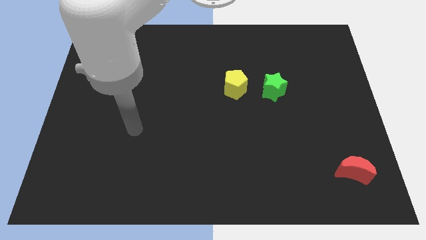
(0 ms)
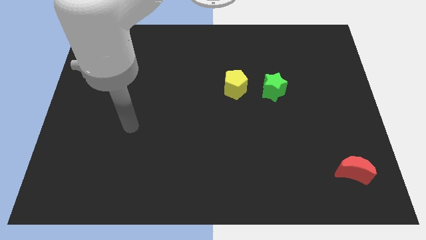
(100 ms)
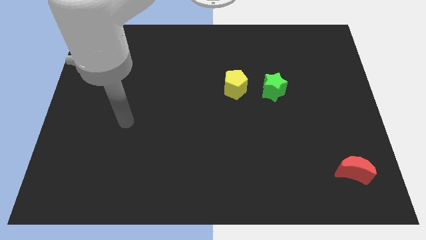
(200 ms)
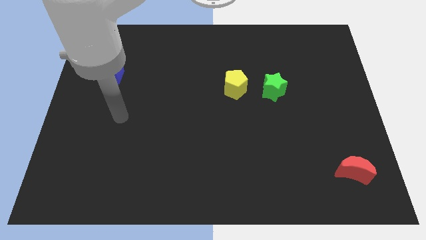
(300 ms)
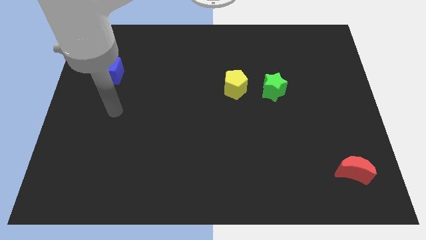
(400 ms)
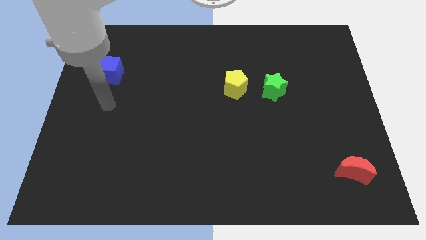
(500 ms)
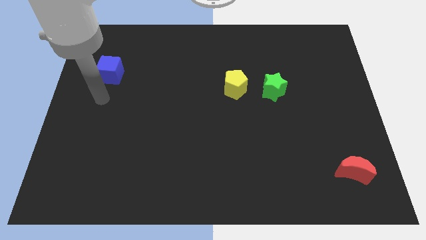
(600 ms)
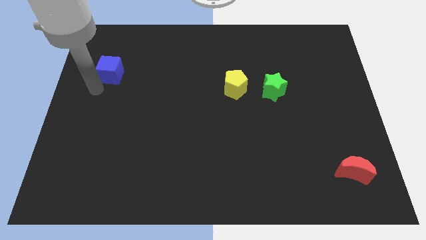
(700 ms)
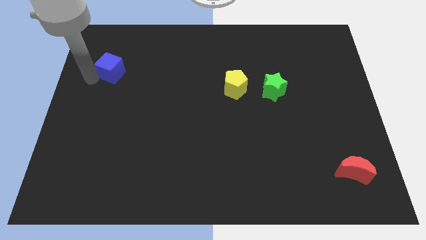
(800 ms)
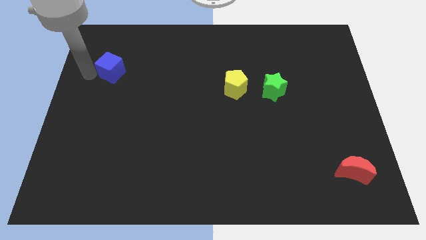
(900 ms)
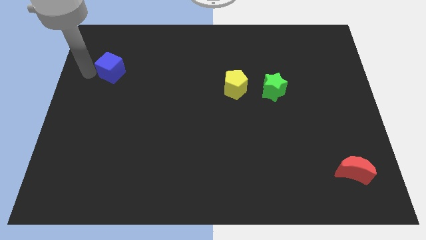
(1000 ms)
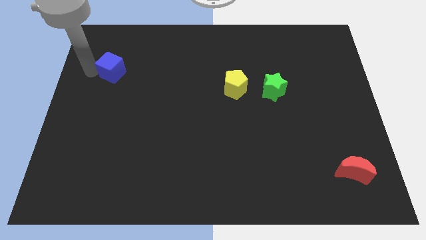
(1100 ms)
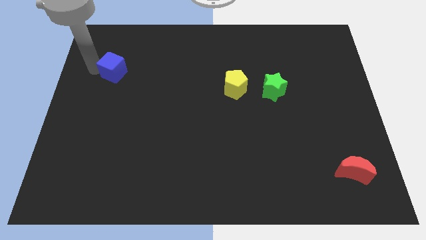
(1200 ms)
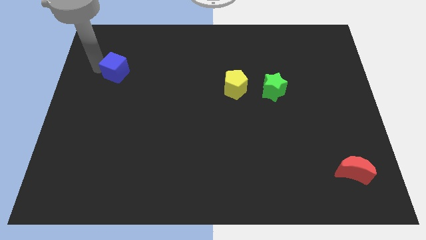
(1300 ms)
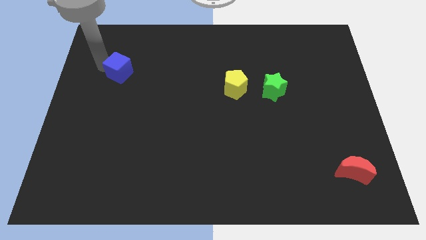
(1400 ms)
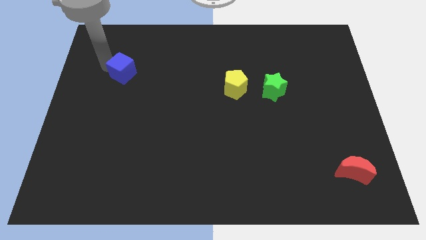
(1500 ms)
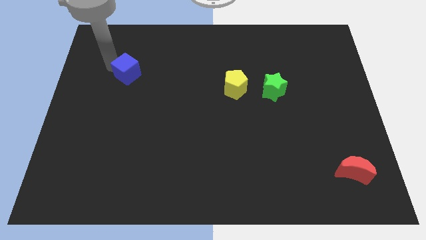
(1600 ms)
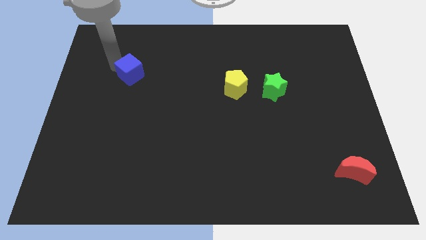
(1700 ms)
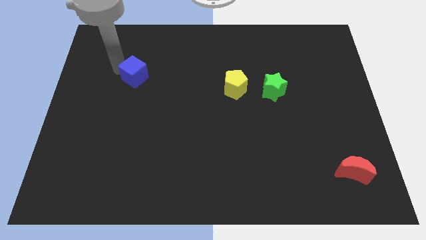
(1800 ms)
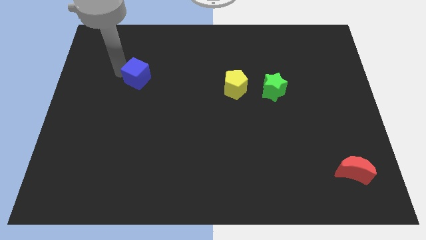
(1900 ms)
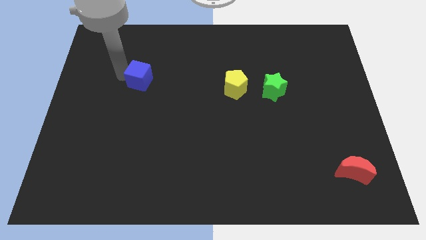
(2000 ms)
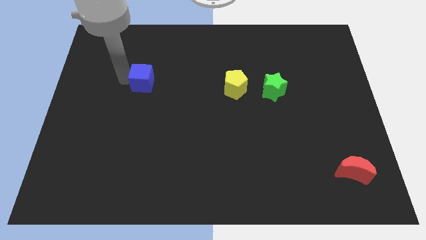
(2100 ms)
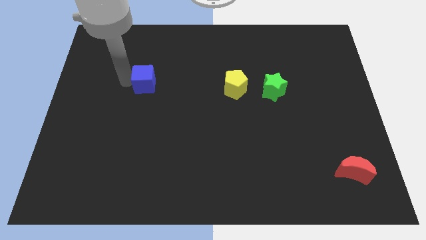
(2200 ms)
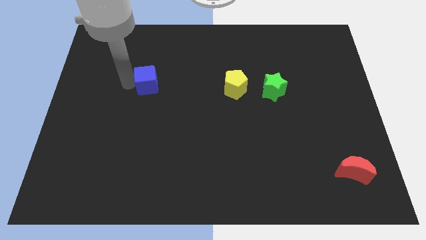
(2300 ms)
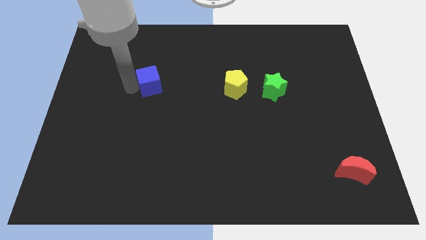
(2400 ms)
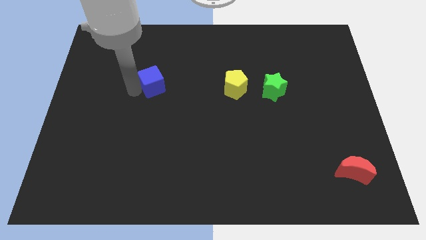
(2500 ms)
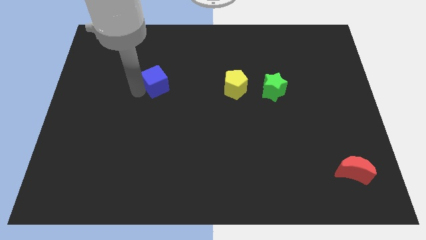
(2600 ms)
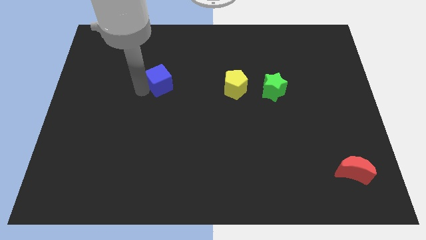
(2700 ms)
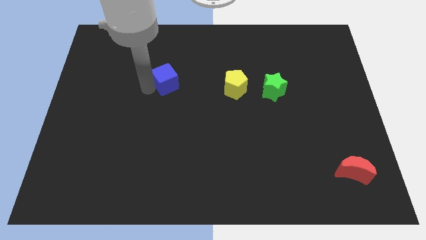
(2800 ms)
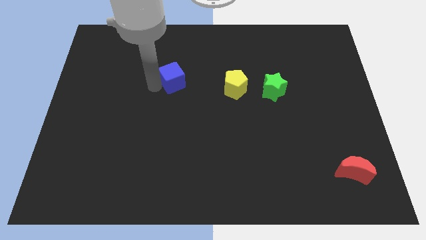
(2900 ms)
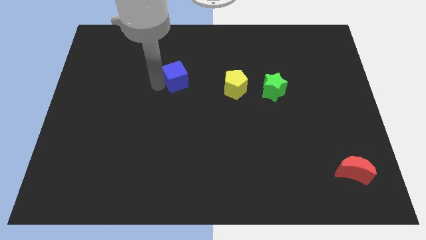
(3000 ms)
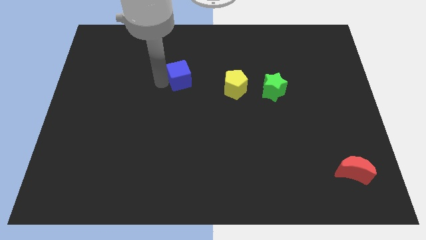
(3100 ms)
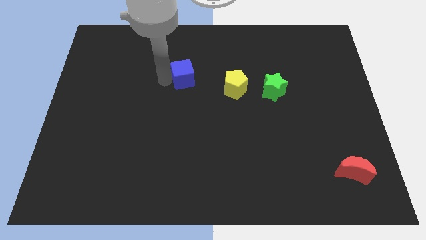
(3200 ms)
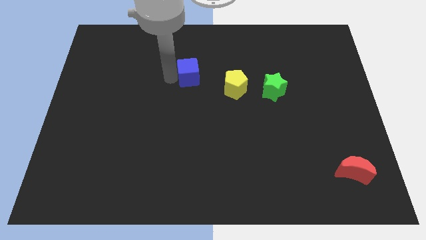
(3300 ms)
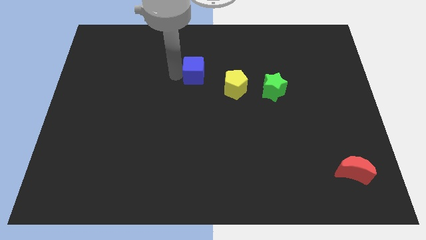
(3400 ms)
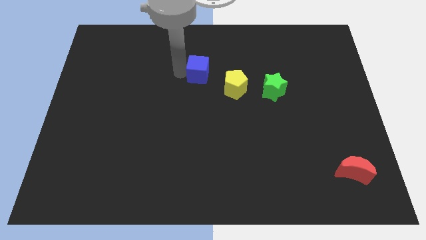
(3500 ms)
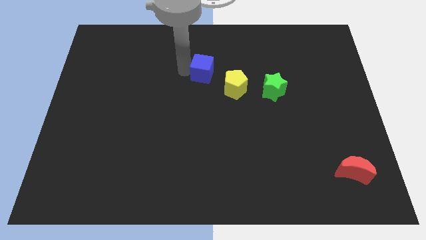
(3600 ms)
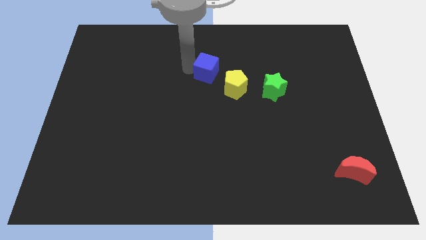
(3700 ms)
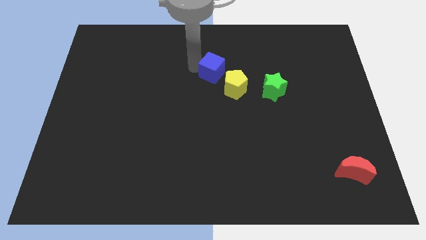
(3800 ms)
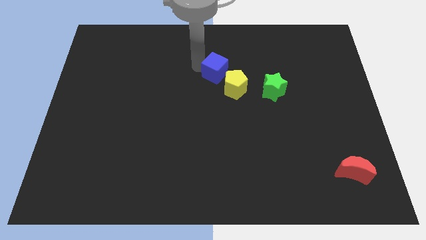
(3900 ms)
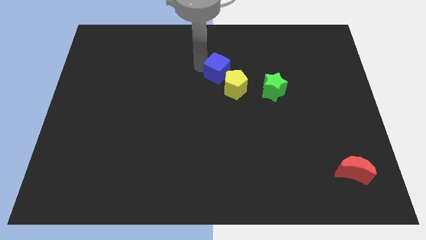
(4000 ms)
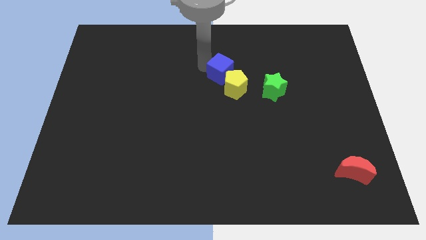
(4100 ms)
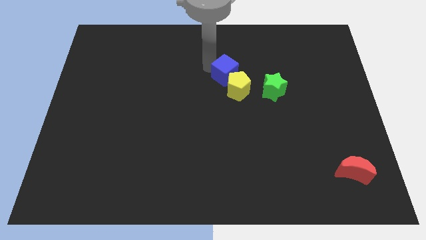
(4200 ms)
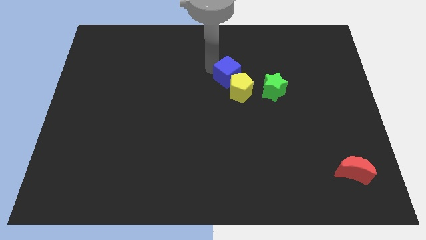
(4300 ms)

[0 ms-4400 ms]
put the blue cube to the pentagon

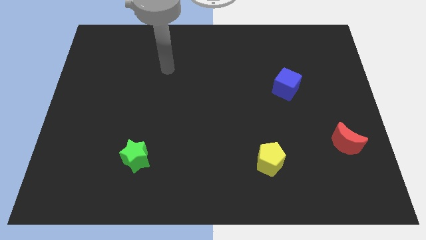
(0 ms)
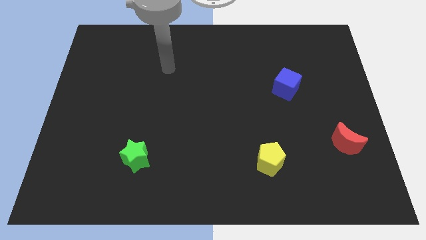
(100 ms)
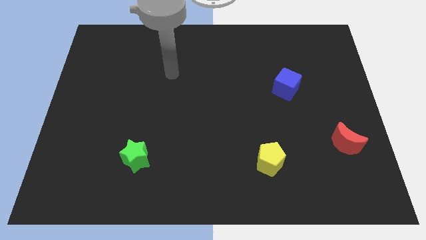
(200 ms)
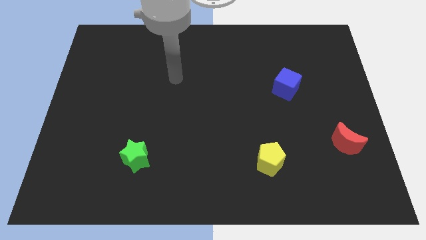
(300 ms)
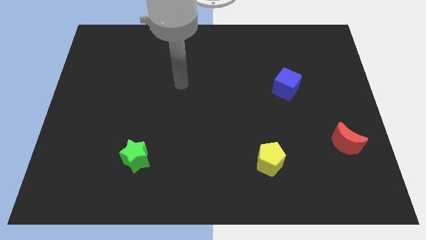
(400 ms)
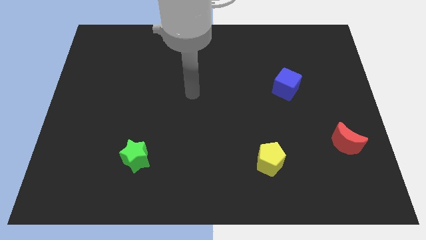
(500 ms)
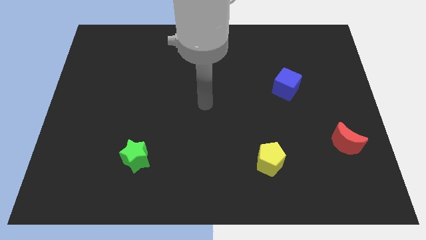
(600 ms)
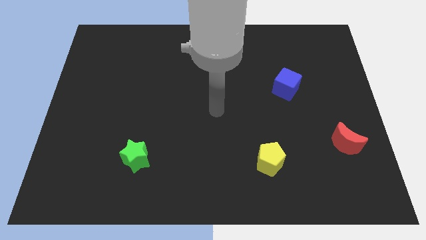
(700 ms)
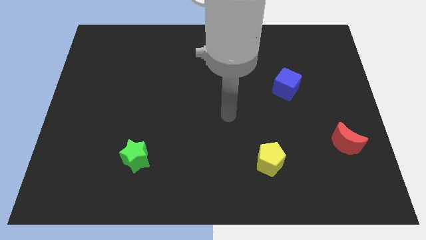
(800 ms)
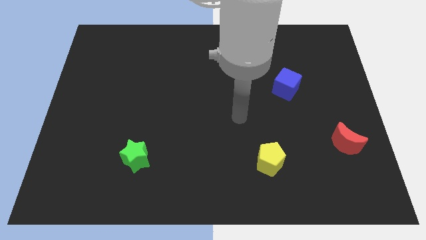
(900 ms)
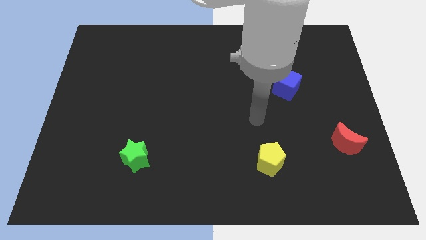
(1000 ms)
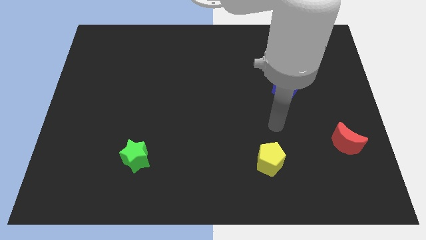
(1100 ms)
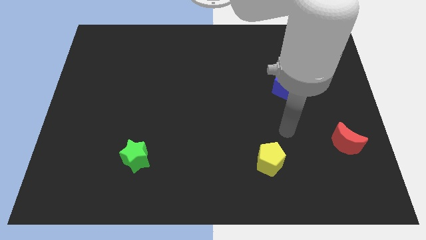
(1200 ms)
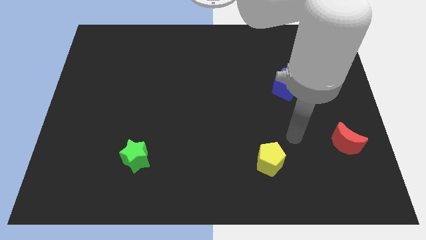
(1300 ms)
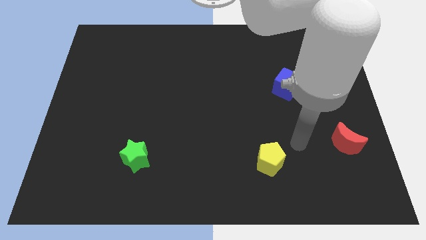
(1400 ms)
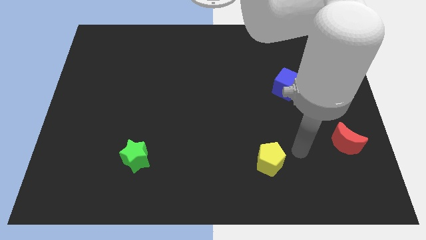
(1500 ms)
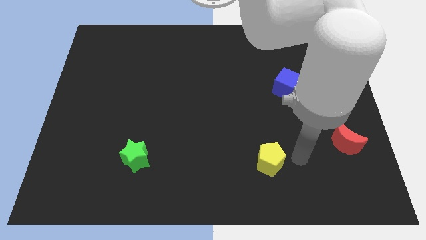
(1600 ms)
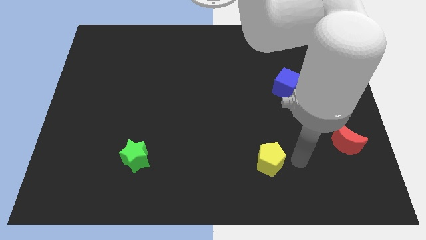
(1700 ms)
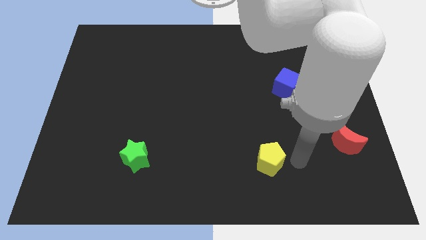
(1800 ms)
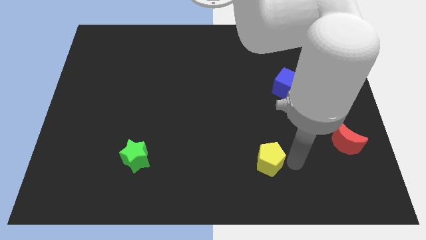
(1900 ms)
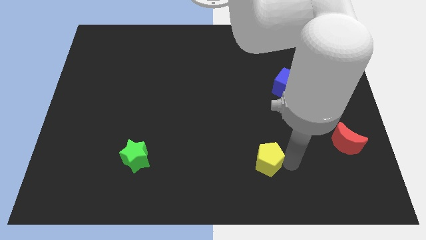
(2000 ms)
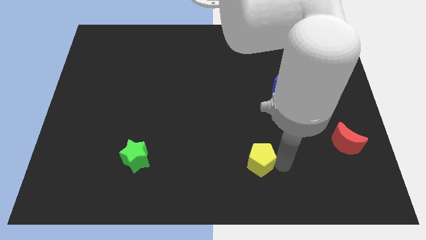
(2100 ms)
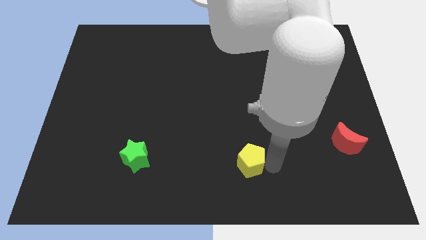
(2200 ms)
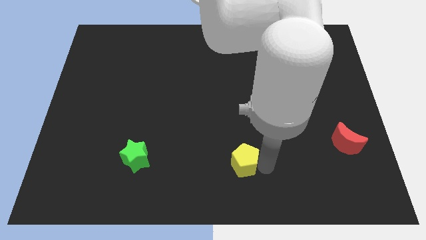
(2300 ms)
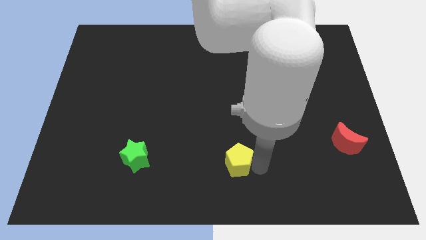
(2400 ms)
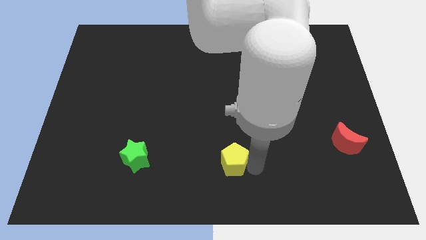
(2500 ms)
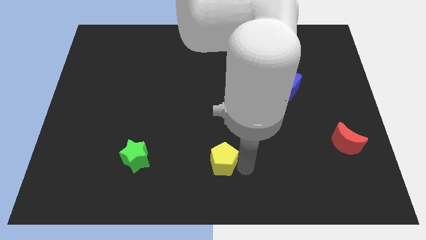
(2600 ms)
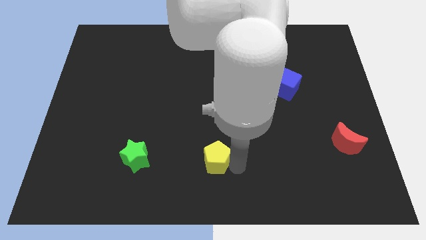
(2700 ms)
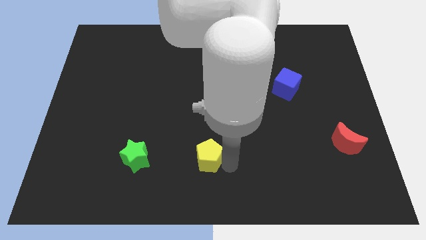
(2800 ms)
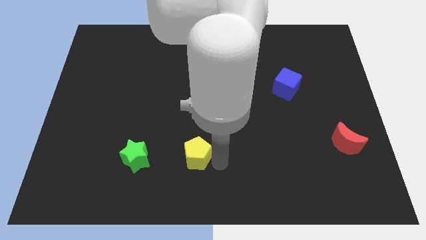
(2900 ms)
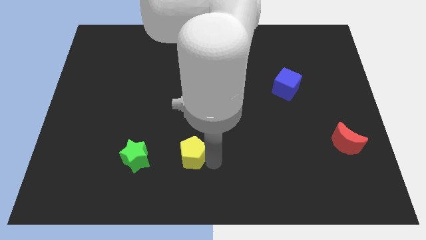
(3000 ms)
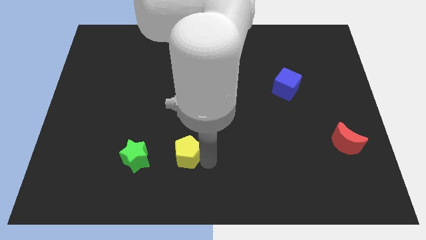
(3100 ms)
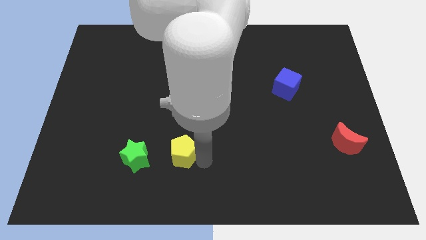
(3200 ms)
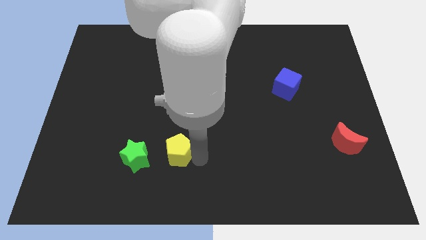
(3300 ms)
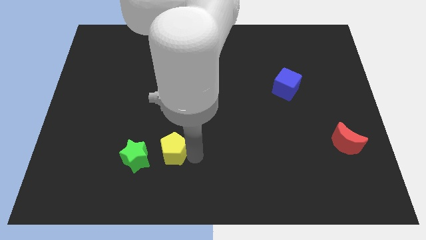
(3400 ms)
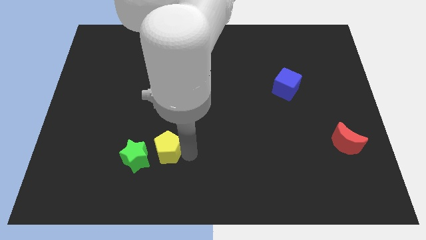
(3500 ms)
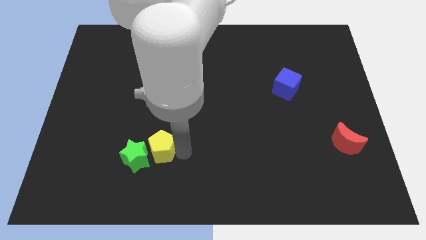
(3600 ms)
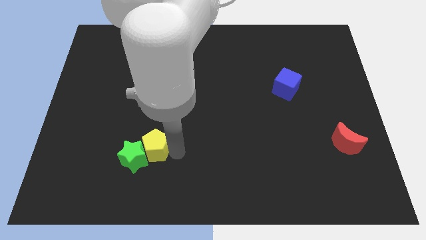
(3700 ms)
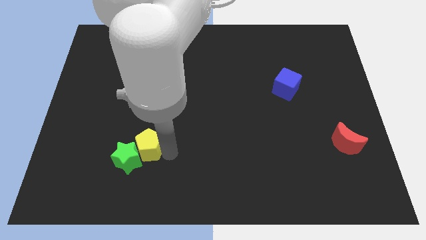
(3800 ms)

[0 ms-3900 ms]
move the yellow block towards the green star

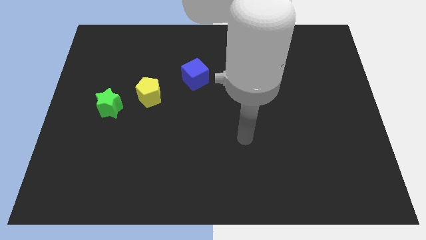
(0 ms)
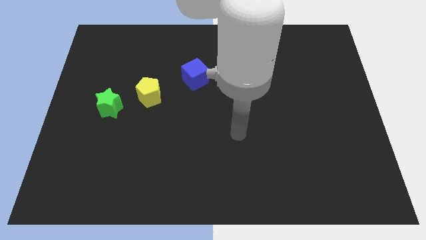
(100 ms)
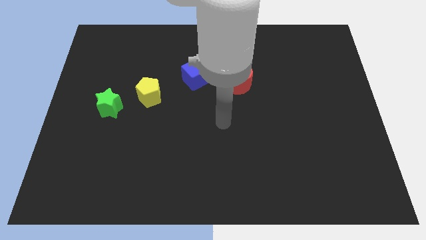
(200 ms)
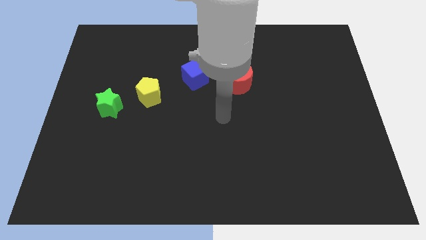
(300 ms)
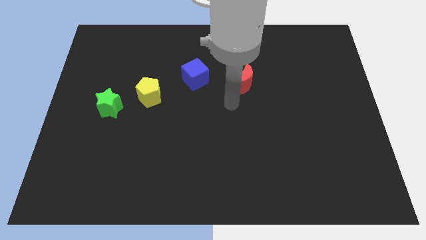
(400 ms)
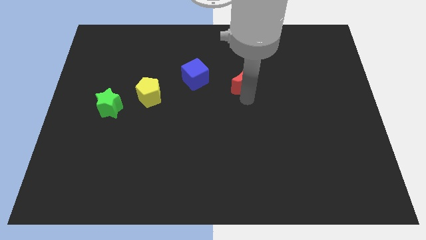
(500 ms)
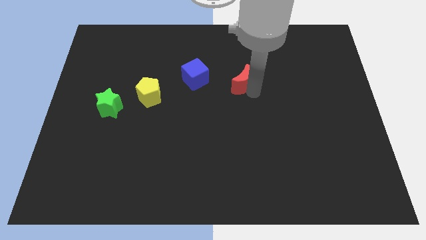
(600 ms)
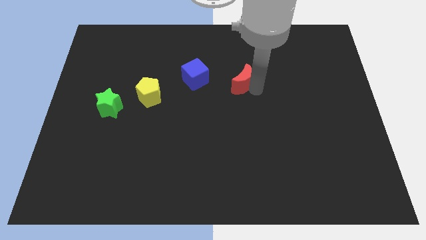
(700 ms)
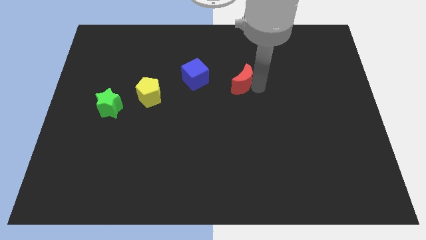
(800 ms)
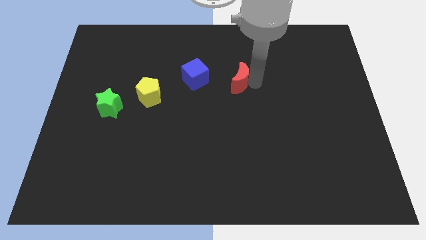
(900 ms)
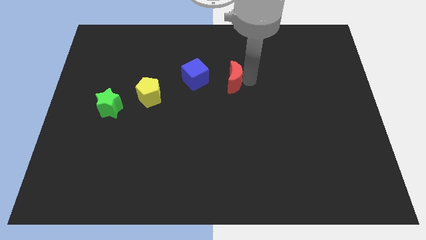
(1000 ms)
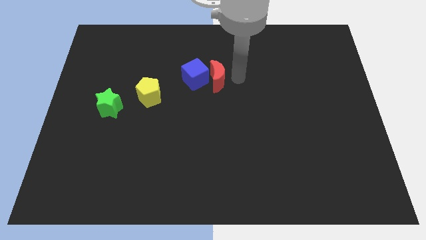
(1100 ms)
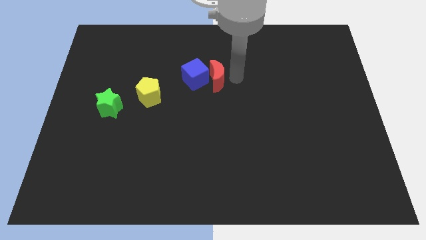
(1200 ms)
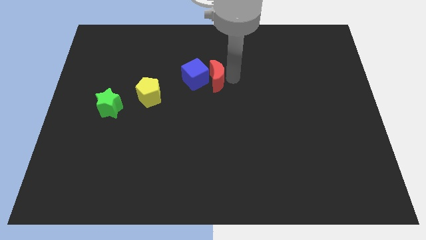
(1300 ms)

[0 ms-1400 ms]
move the red moon towards the cube
